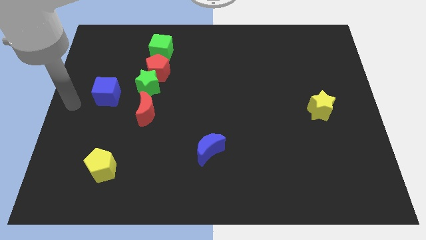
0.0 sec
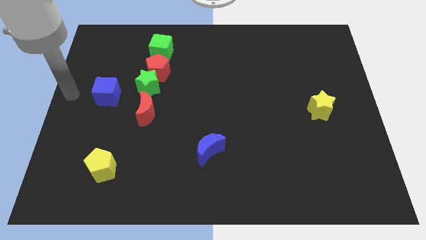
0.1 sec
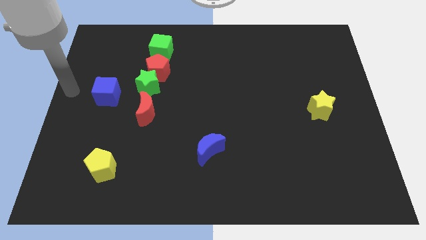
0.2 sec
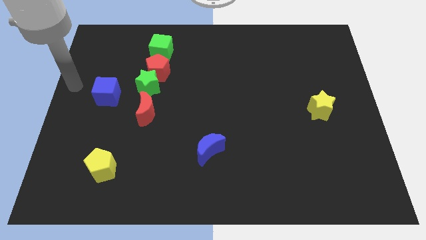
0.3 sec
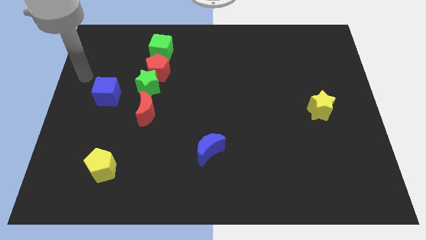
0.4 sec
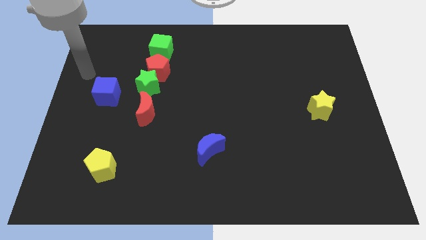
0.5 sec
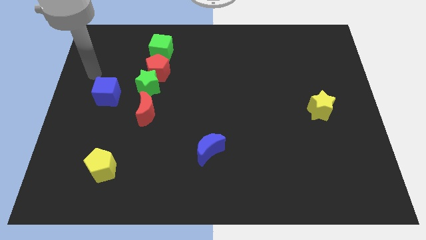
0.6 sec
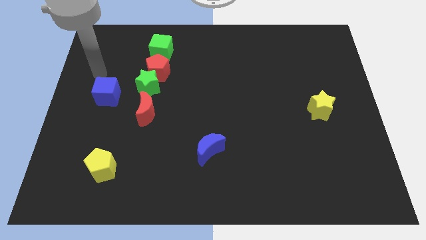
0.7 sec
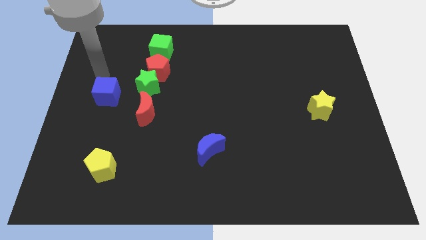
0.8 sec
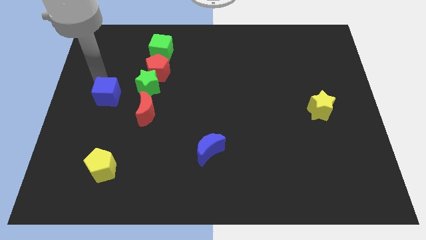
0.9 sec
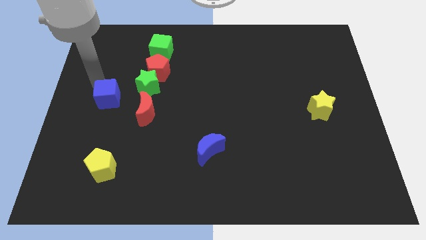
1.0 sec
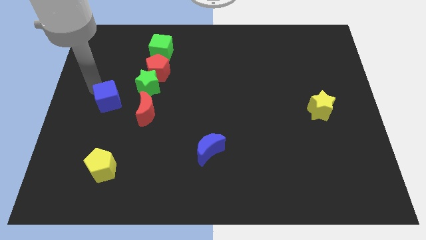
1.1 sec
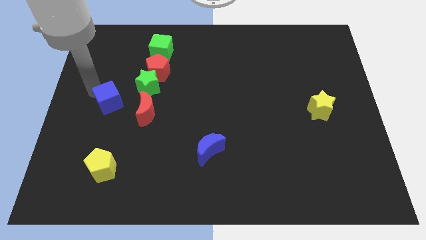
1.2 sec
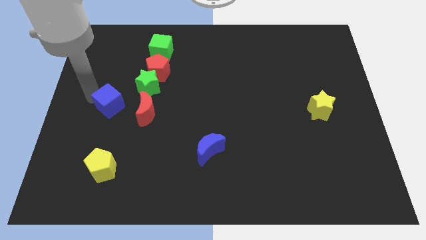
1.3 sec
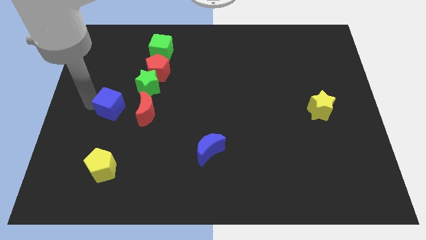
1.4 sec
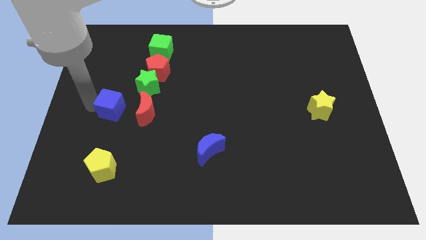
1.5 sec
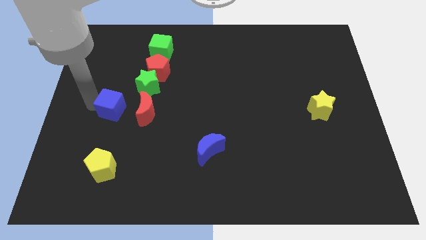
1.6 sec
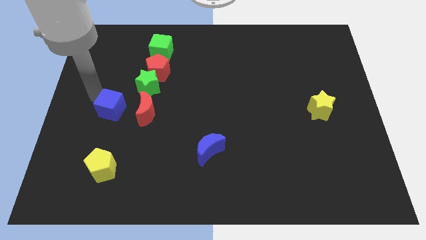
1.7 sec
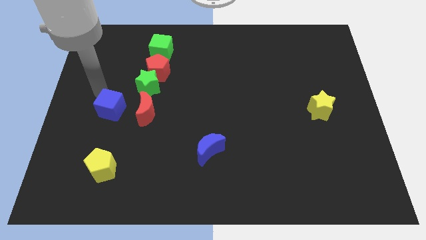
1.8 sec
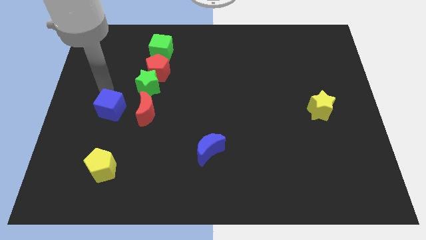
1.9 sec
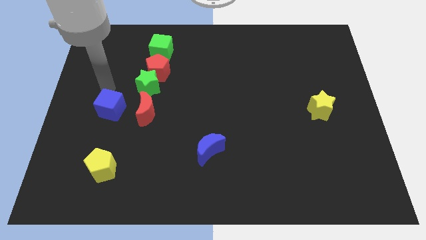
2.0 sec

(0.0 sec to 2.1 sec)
place blue cube to the left of red moon

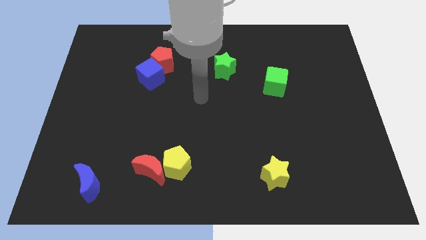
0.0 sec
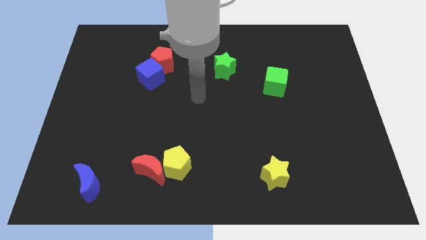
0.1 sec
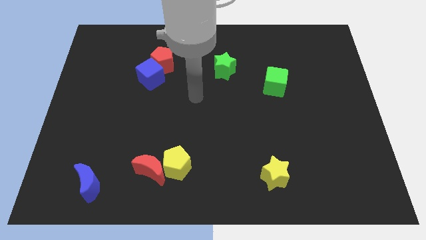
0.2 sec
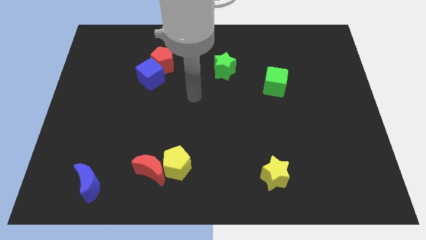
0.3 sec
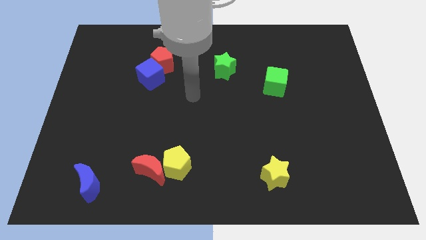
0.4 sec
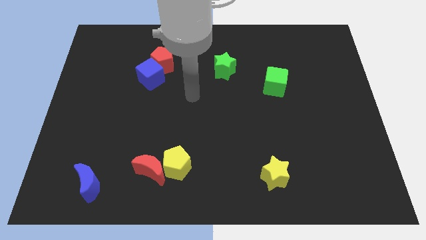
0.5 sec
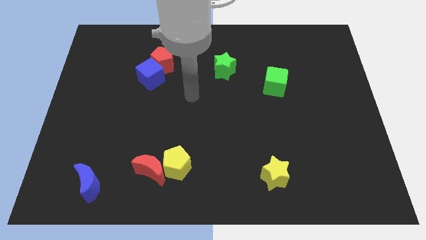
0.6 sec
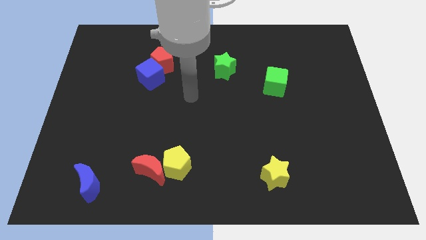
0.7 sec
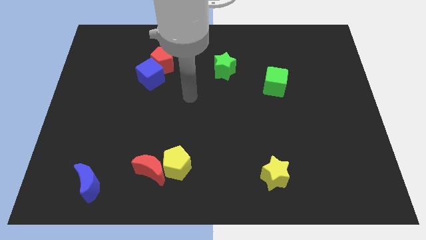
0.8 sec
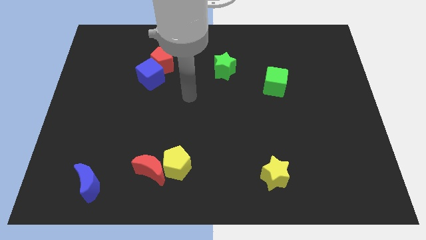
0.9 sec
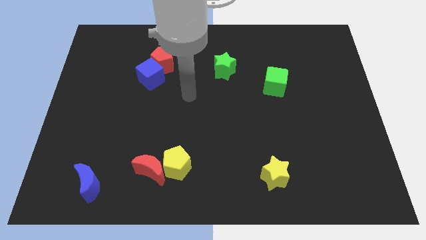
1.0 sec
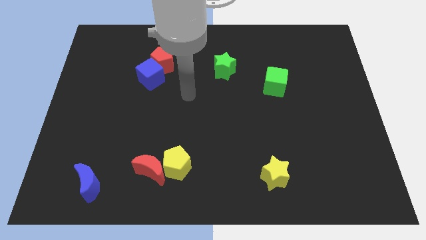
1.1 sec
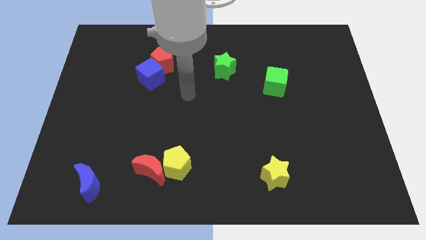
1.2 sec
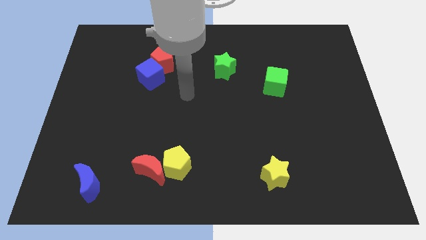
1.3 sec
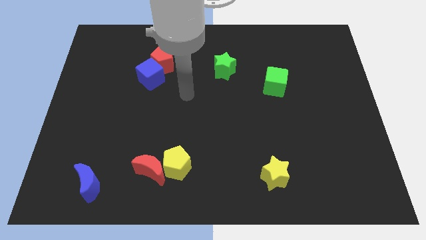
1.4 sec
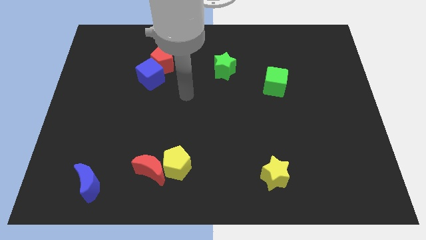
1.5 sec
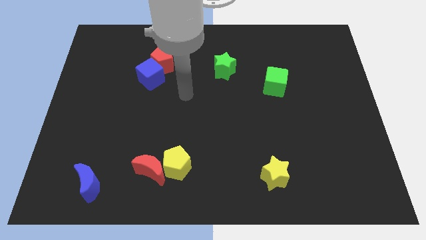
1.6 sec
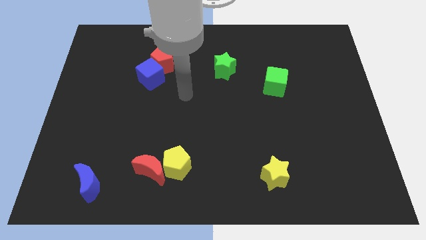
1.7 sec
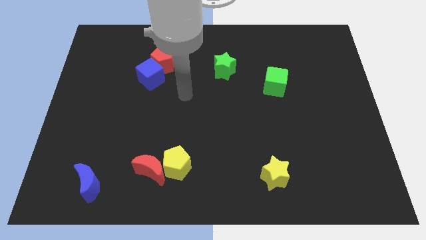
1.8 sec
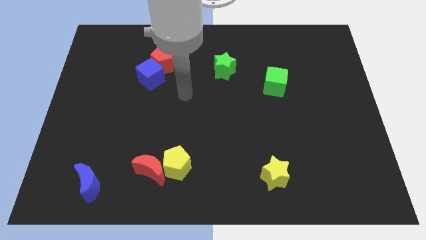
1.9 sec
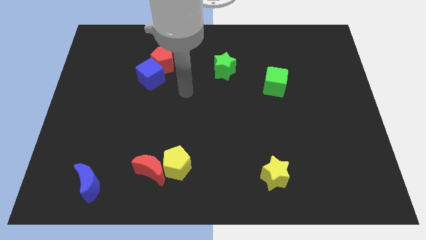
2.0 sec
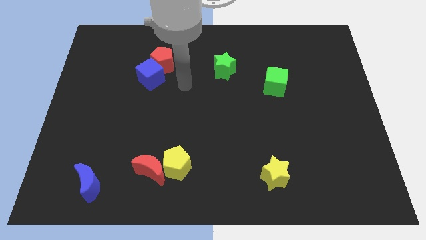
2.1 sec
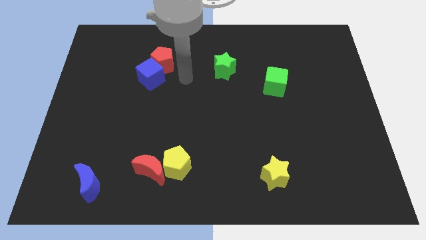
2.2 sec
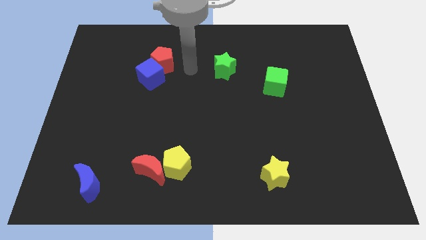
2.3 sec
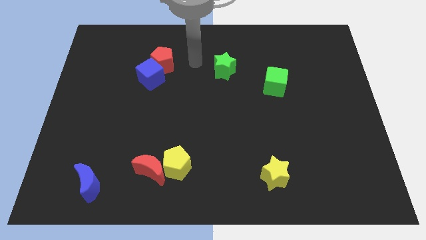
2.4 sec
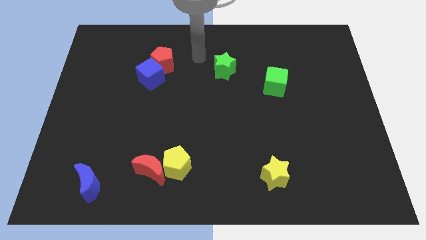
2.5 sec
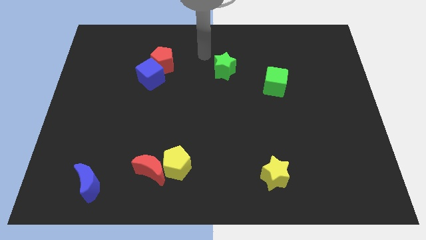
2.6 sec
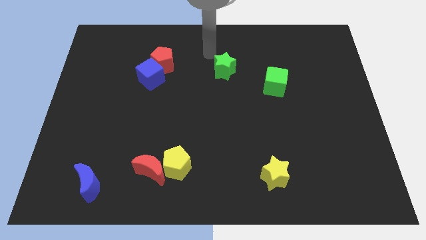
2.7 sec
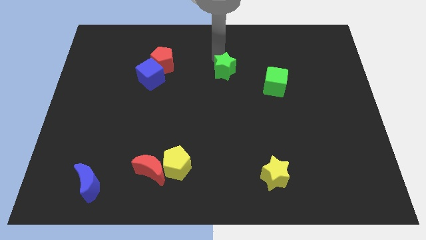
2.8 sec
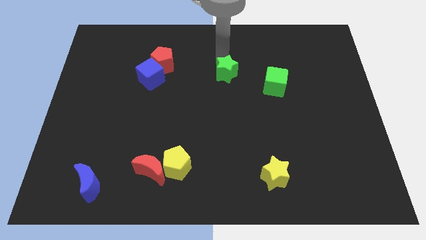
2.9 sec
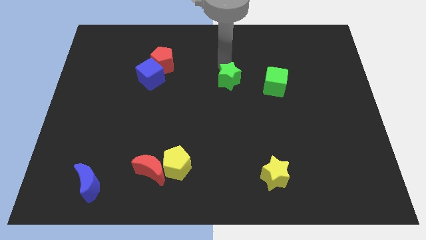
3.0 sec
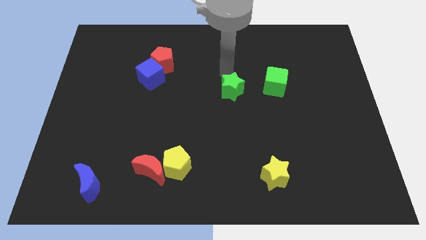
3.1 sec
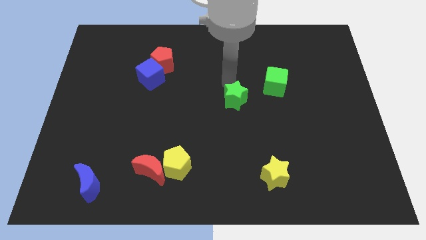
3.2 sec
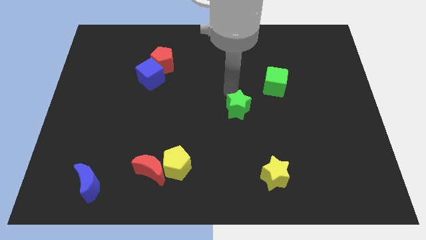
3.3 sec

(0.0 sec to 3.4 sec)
push the green star to the center

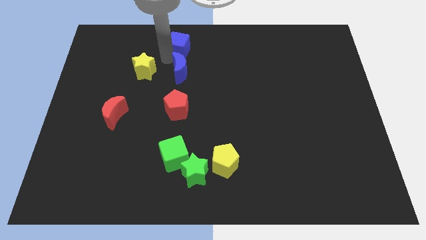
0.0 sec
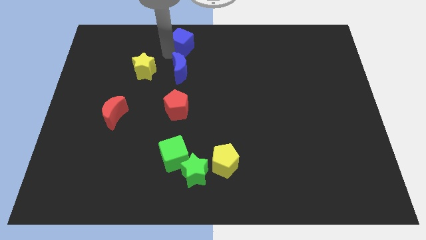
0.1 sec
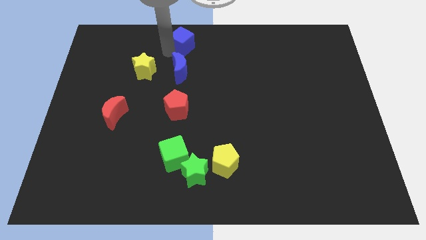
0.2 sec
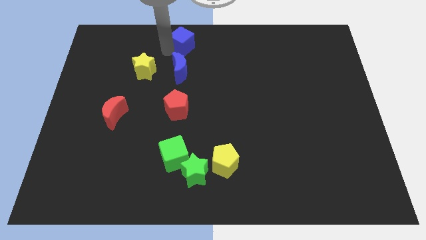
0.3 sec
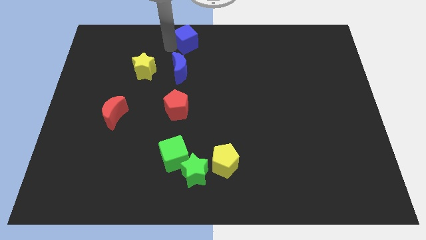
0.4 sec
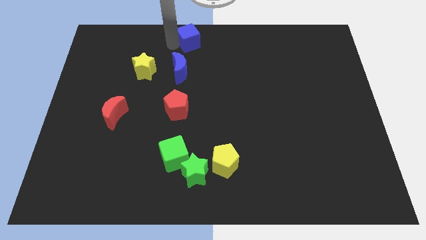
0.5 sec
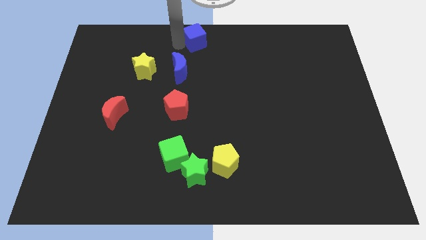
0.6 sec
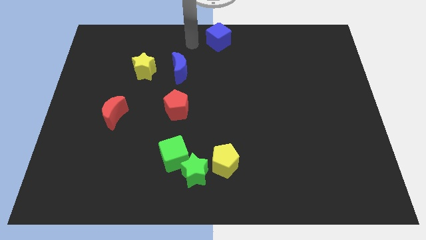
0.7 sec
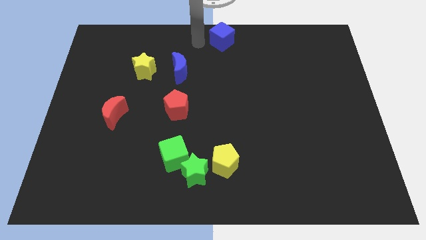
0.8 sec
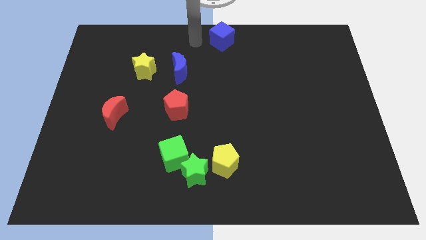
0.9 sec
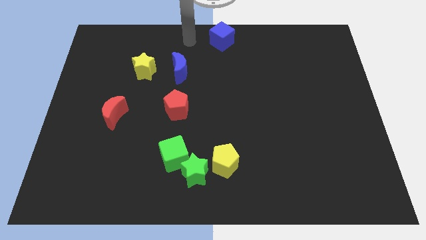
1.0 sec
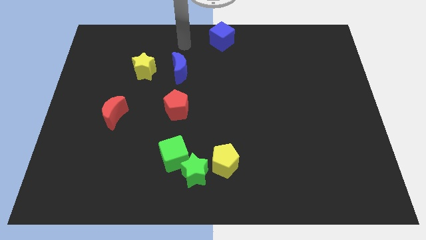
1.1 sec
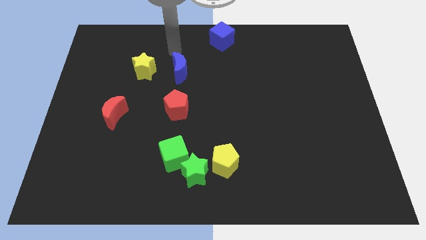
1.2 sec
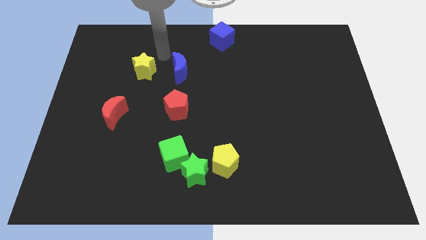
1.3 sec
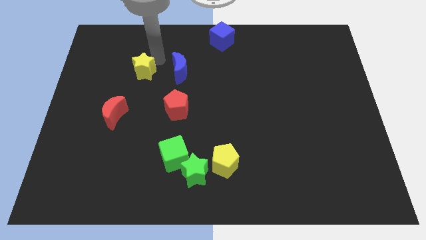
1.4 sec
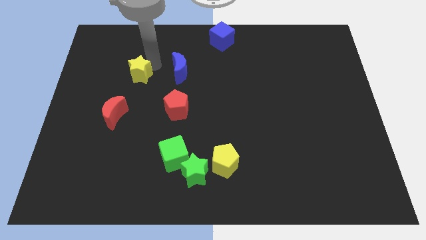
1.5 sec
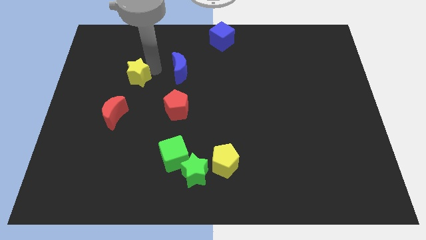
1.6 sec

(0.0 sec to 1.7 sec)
separate blue moon and blue cube

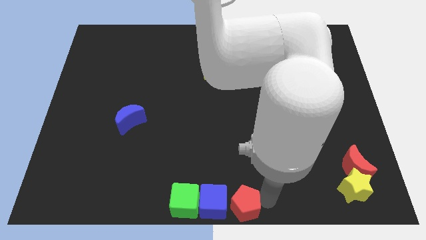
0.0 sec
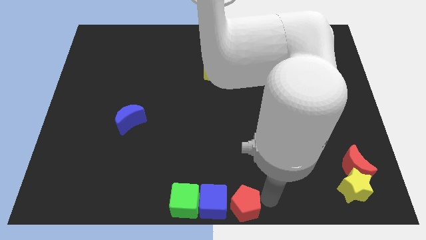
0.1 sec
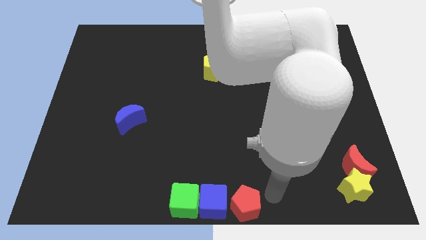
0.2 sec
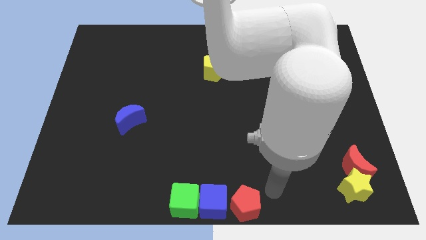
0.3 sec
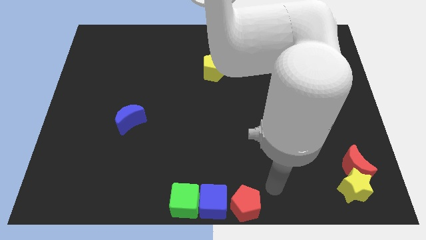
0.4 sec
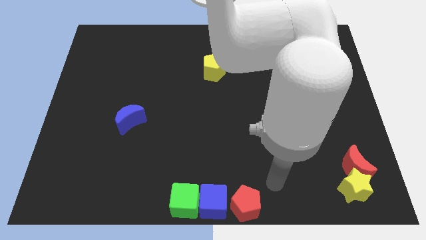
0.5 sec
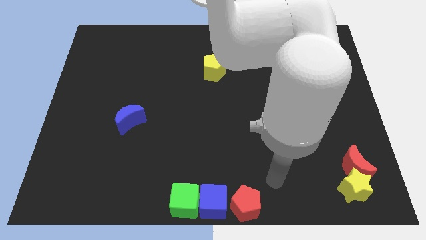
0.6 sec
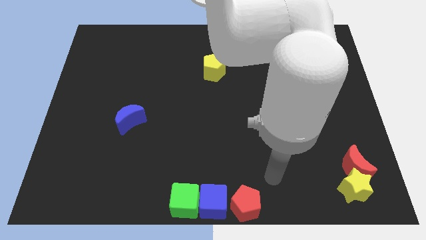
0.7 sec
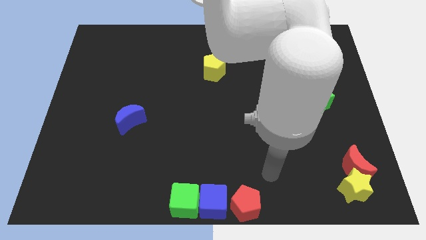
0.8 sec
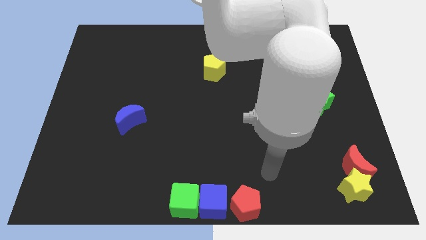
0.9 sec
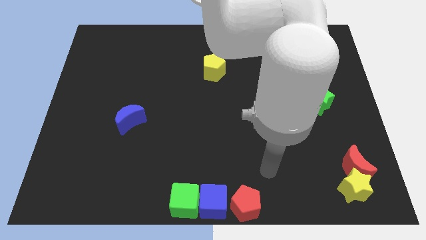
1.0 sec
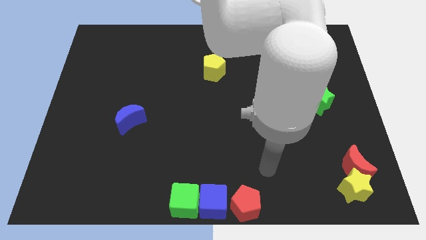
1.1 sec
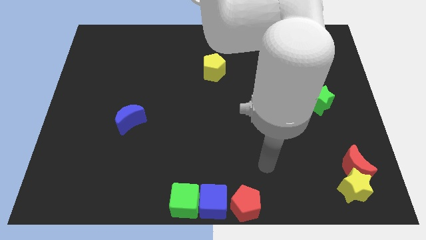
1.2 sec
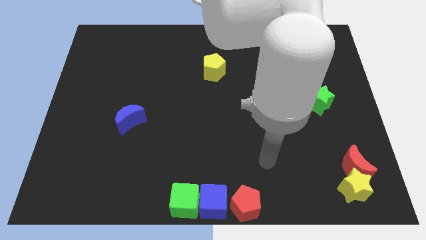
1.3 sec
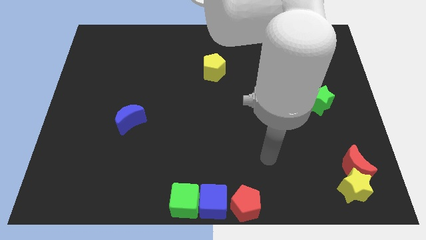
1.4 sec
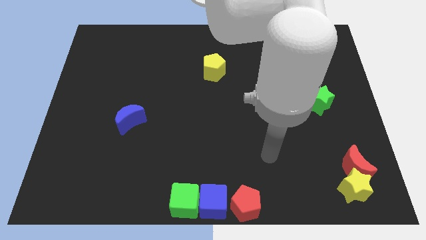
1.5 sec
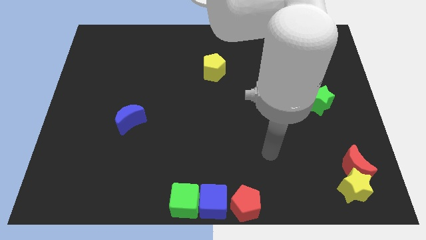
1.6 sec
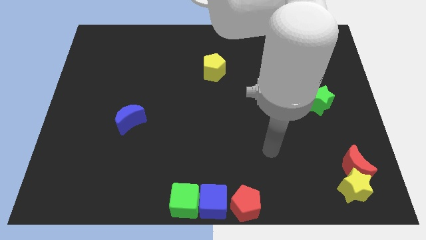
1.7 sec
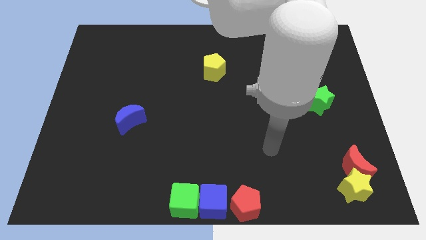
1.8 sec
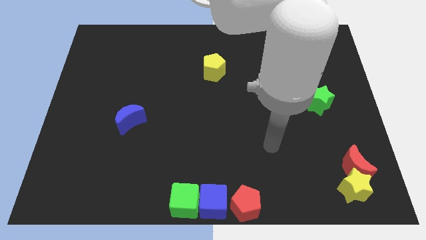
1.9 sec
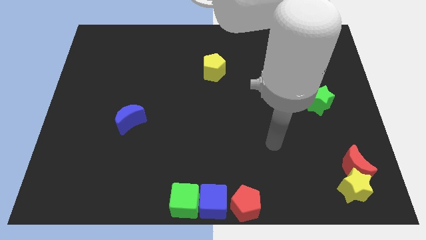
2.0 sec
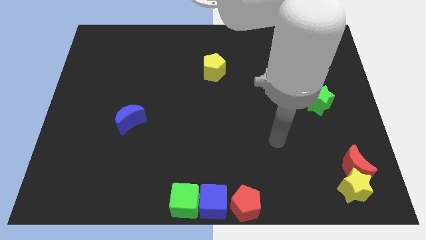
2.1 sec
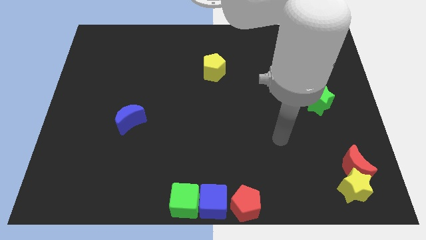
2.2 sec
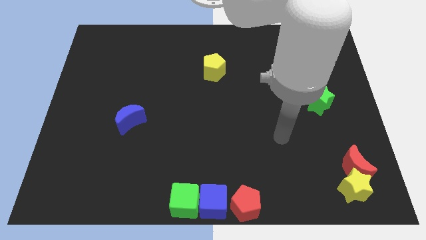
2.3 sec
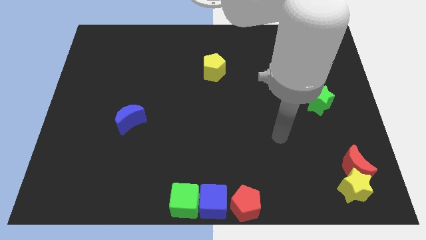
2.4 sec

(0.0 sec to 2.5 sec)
move your arm away from the red pentagon
